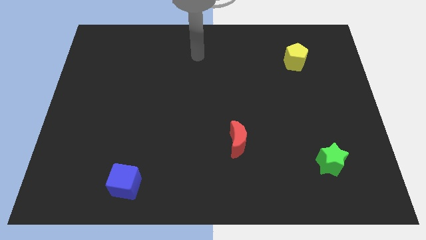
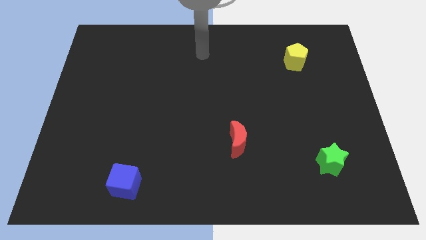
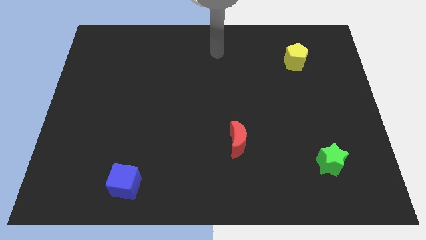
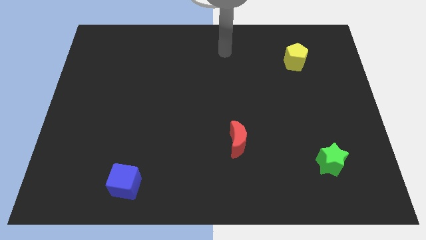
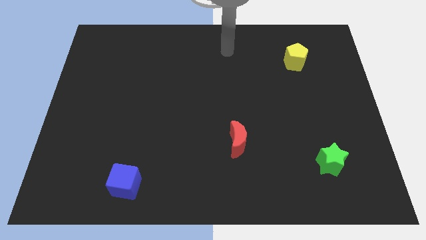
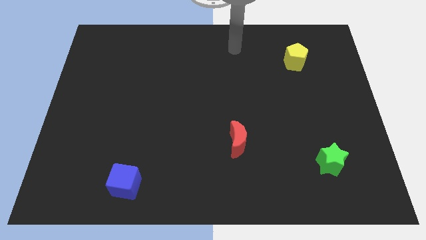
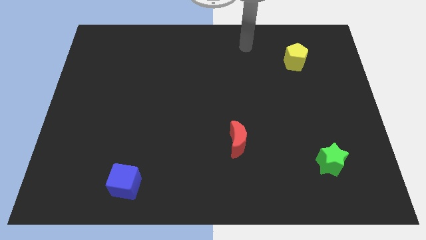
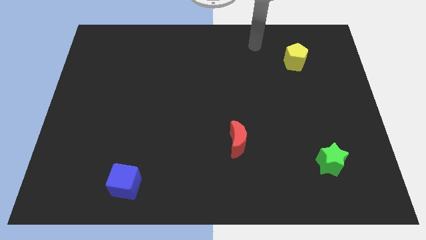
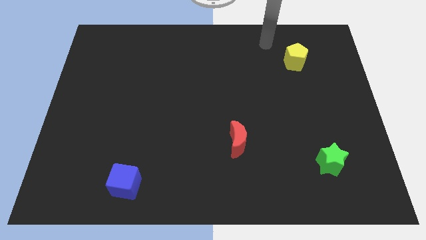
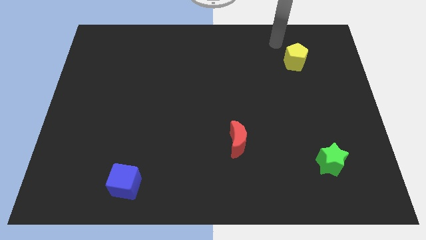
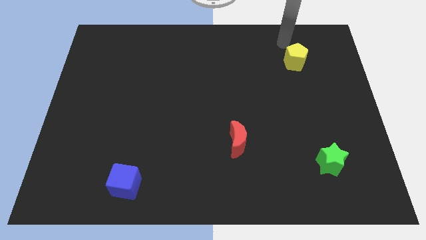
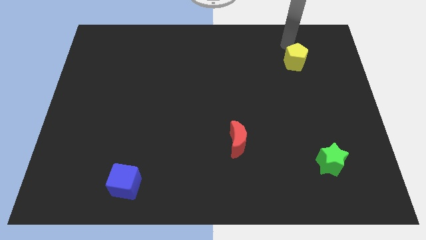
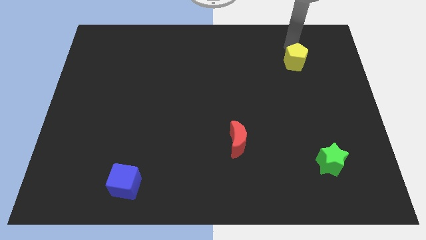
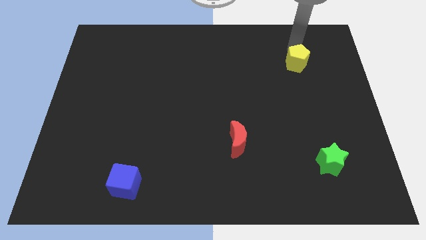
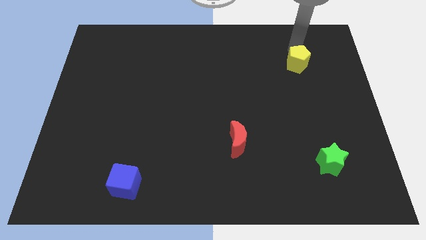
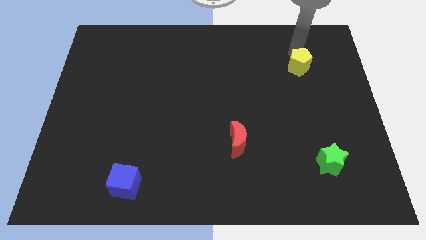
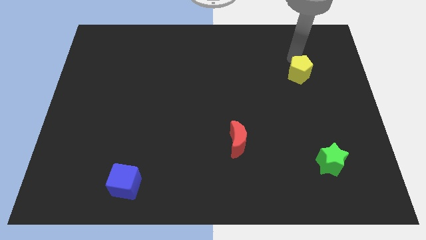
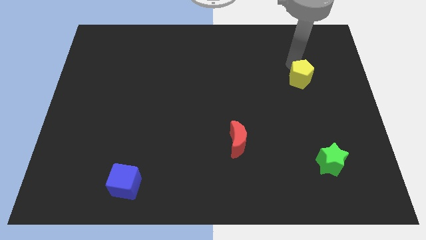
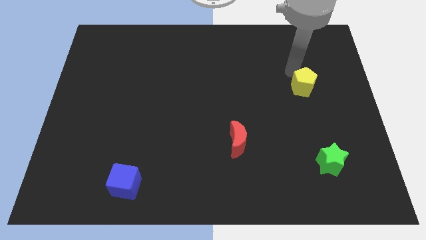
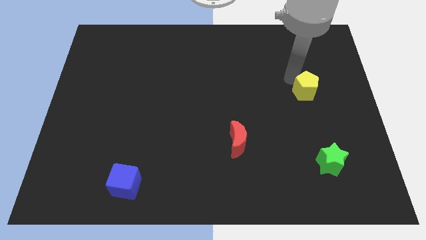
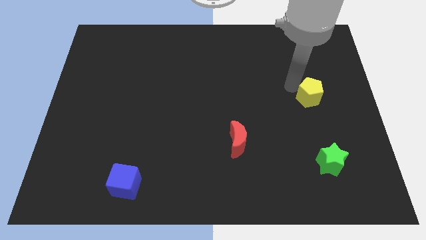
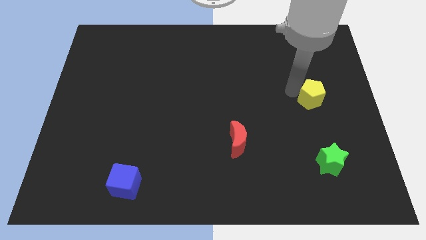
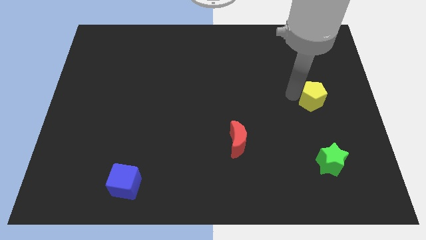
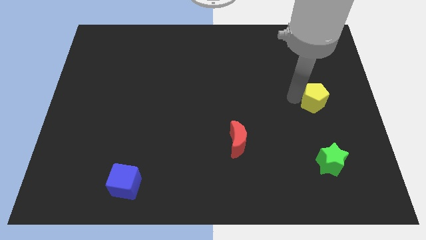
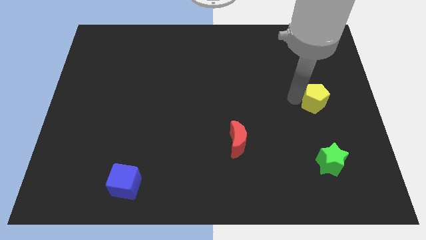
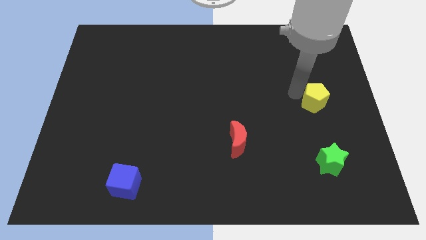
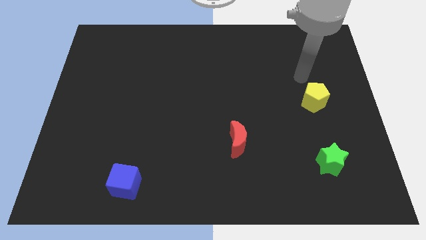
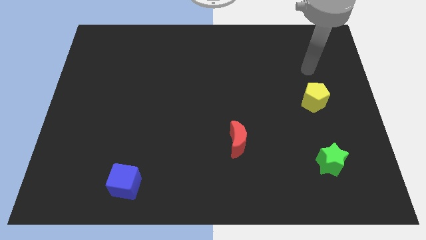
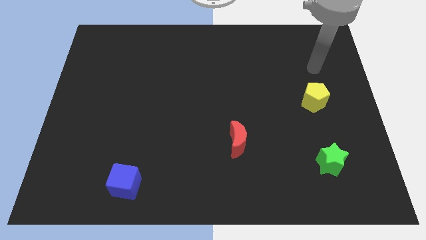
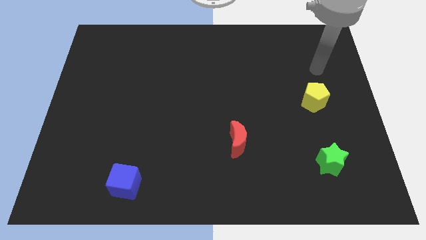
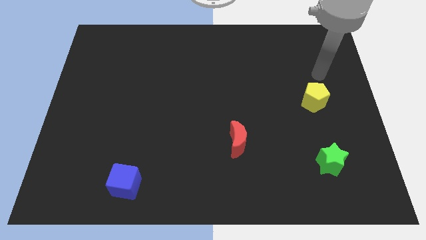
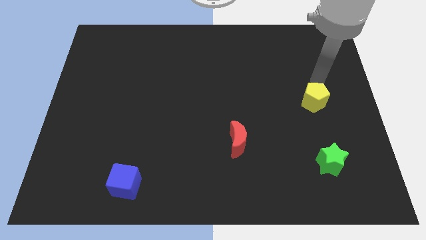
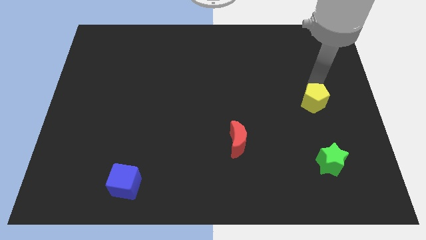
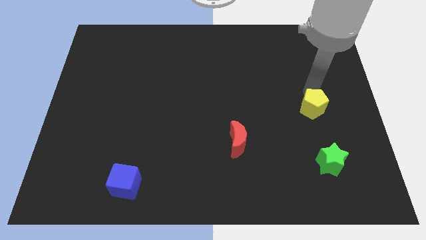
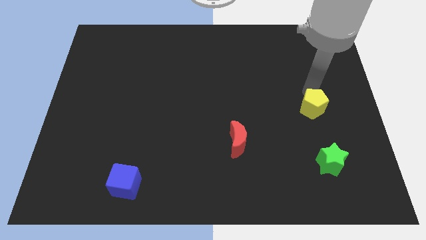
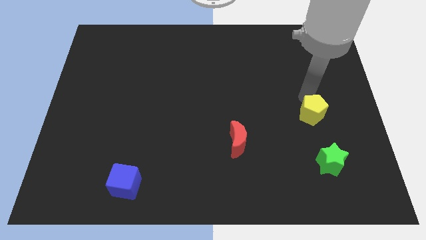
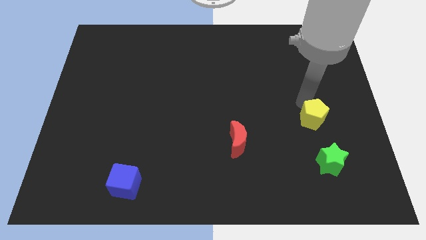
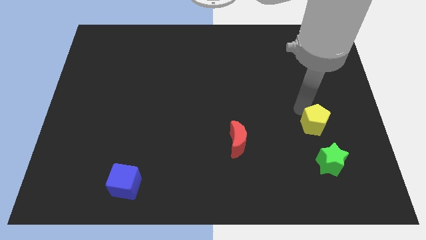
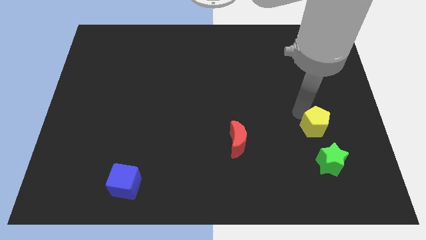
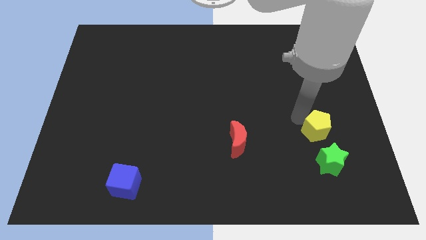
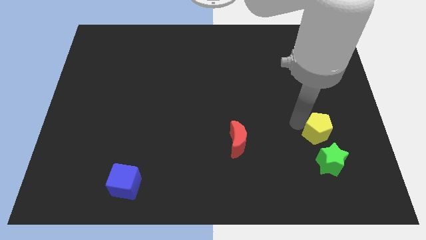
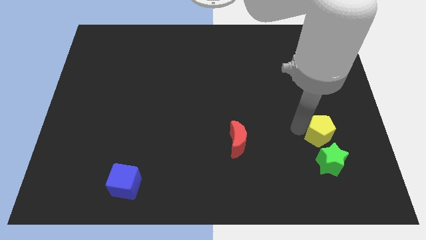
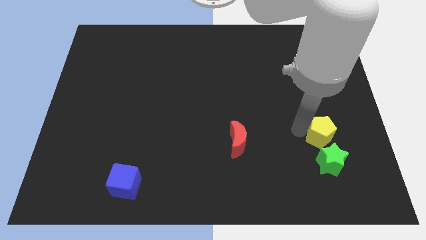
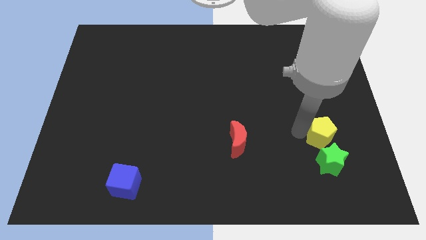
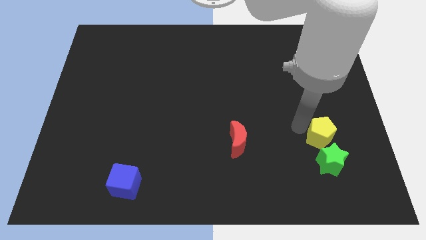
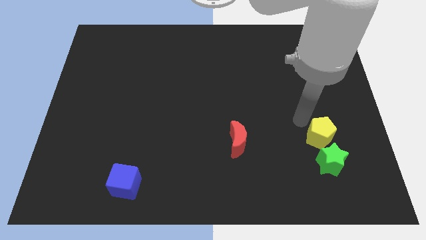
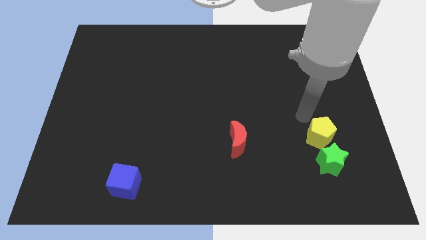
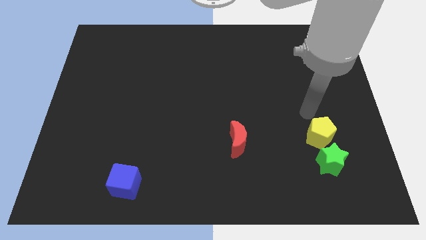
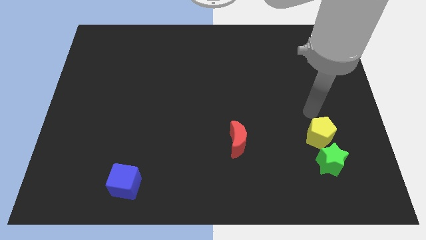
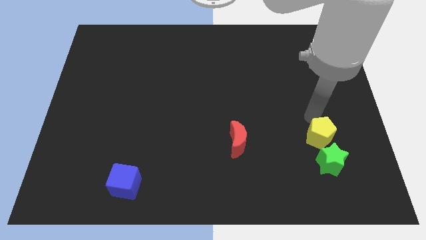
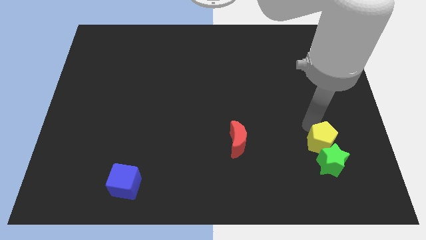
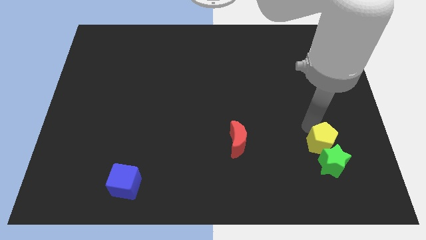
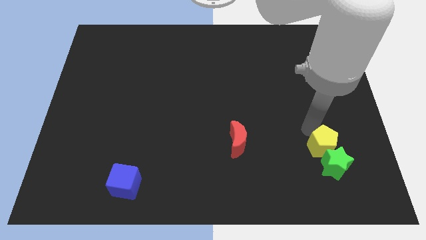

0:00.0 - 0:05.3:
move the pentagon towards the star

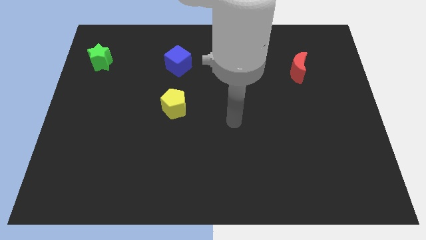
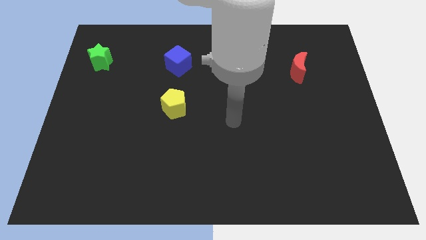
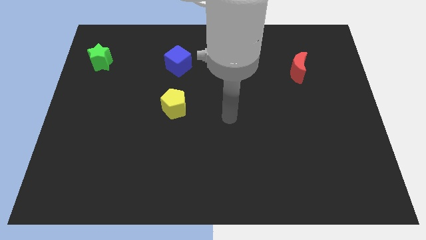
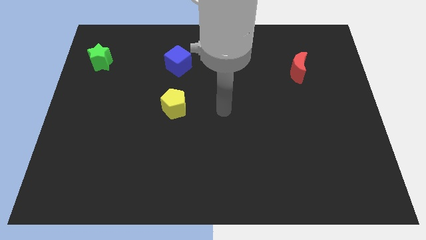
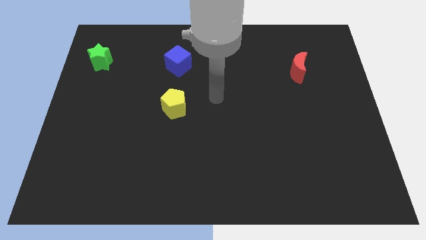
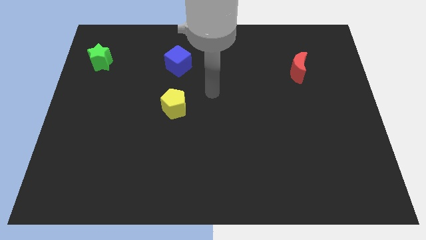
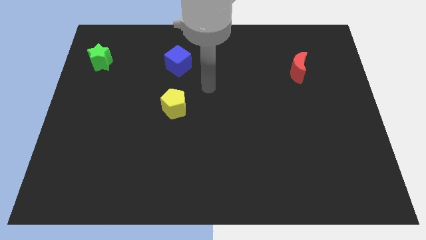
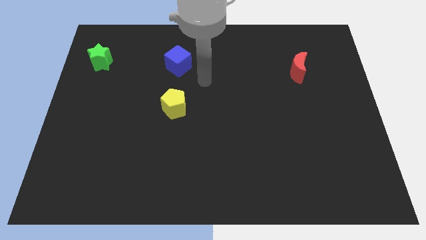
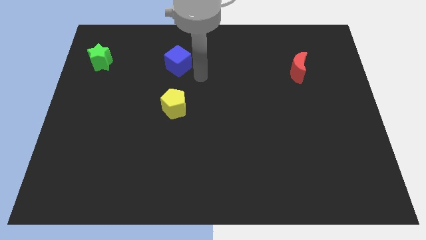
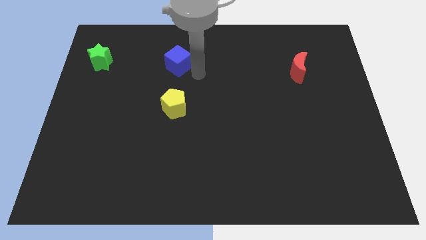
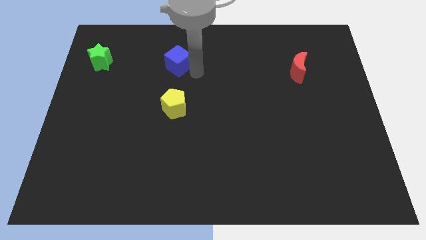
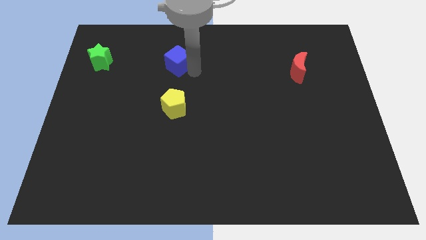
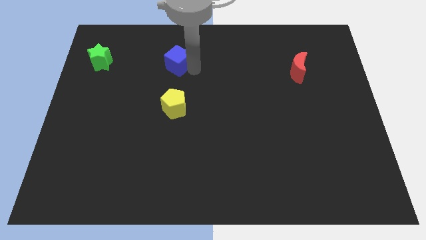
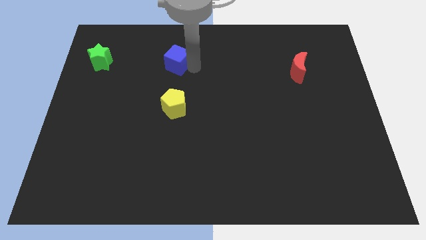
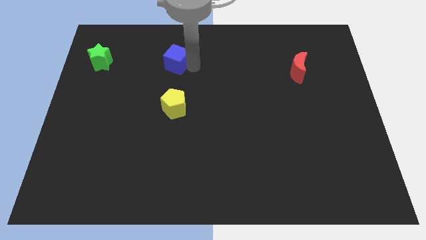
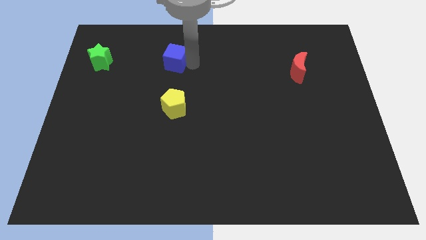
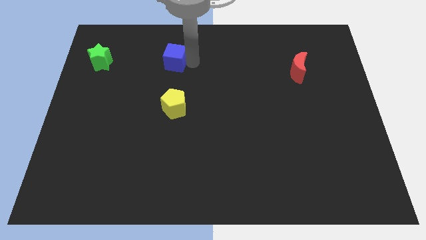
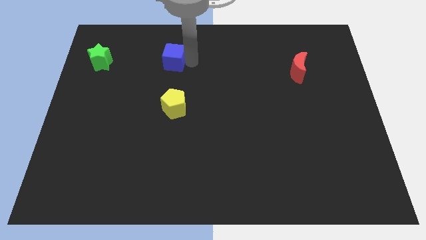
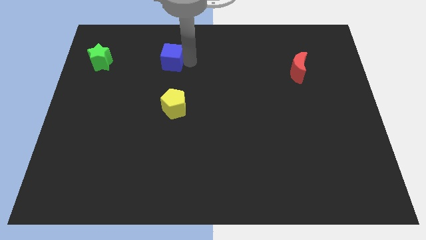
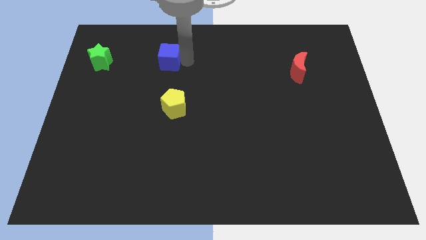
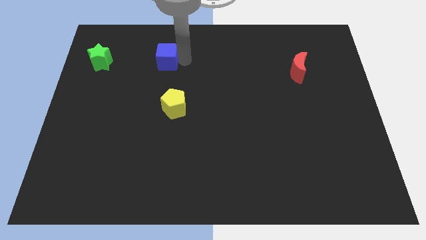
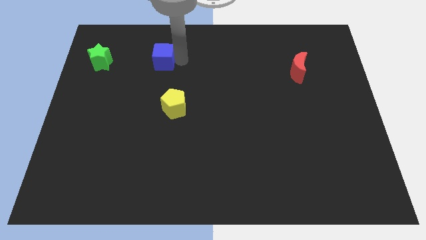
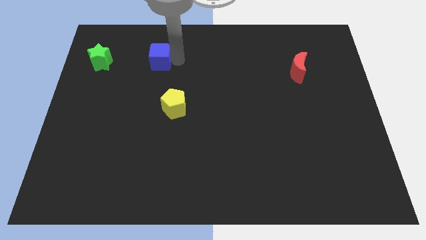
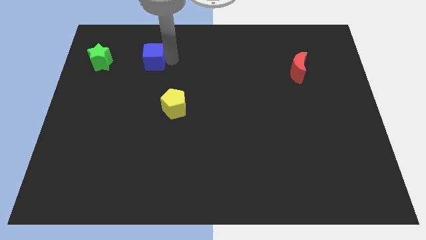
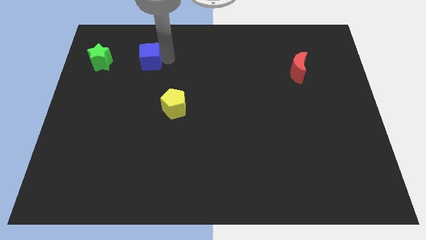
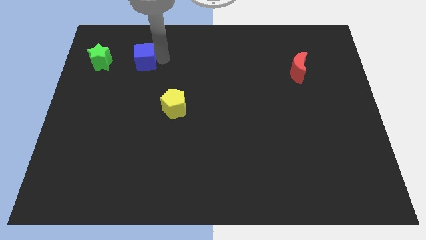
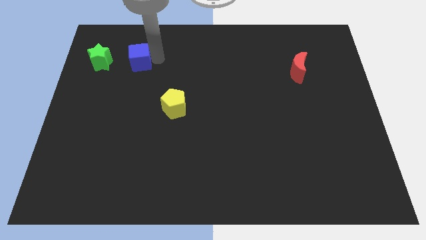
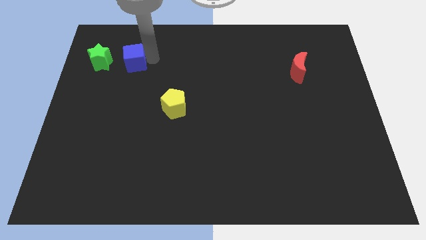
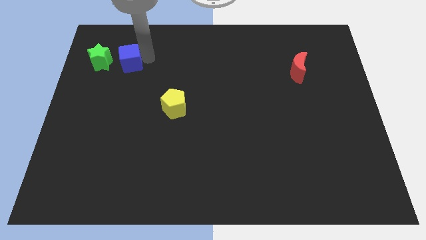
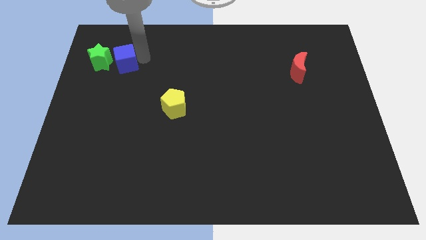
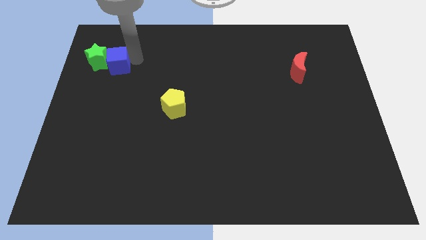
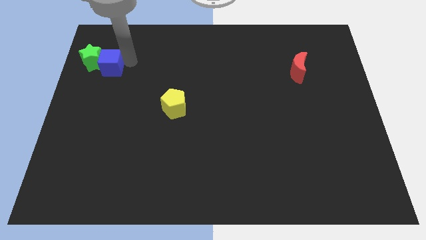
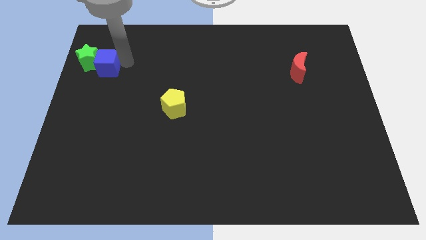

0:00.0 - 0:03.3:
push the blue block close to the star

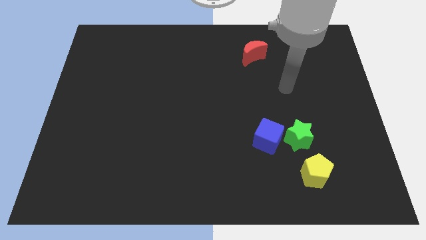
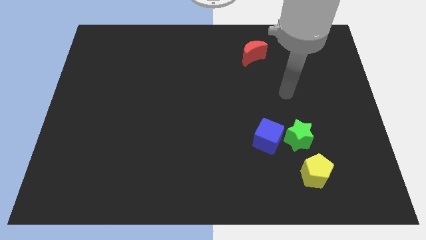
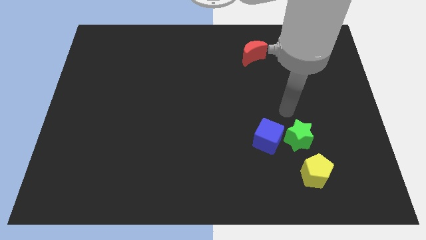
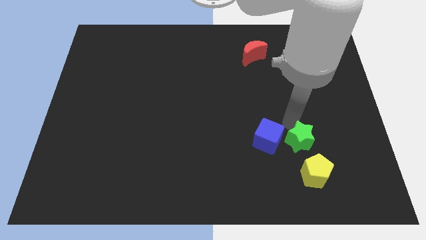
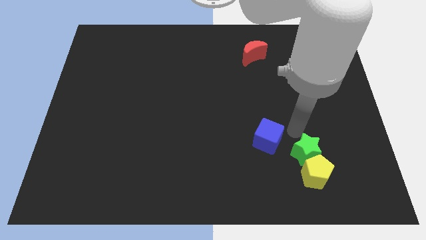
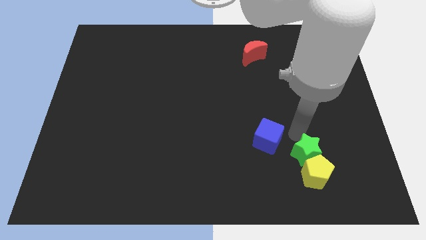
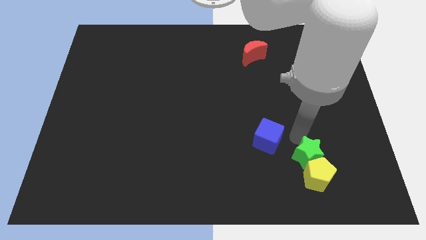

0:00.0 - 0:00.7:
push the green star close to the pentagon
